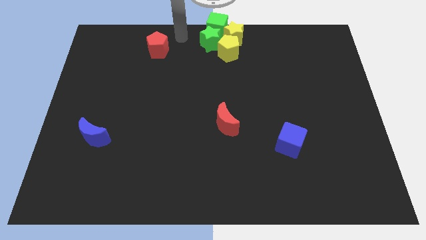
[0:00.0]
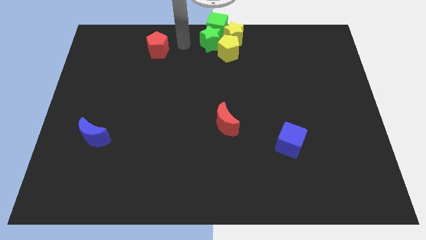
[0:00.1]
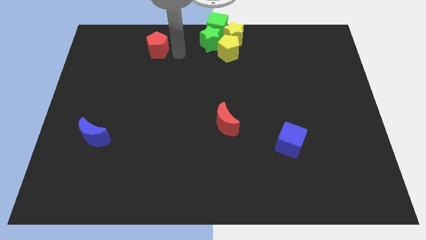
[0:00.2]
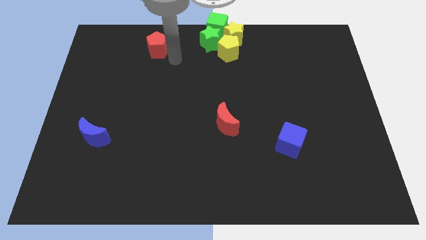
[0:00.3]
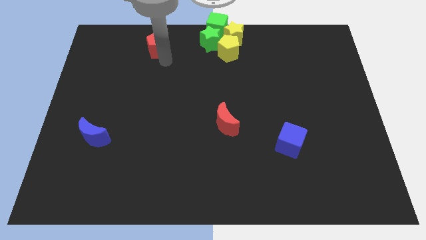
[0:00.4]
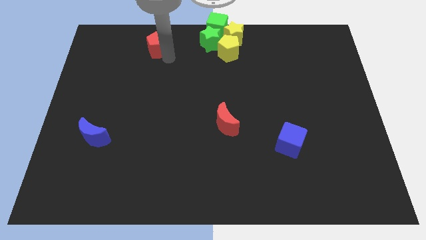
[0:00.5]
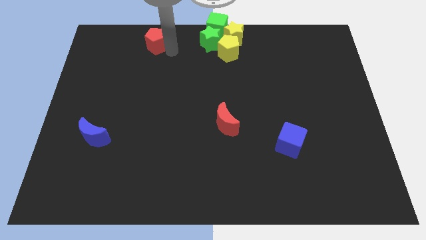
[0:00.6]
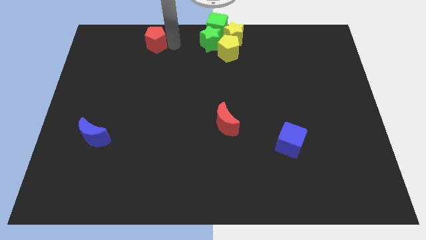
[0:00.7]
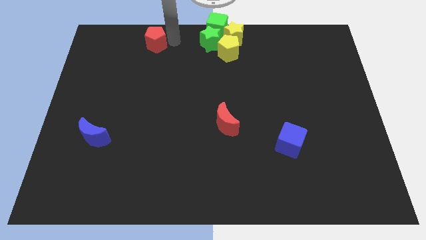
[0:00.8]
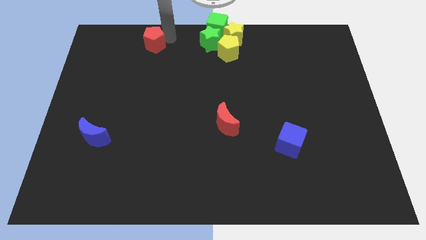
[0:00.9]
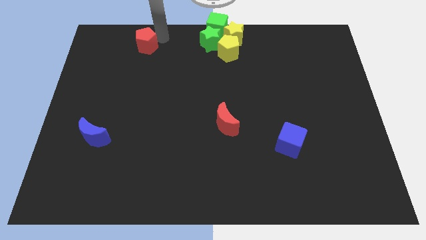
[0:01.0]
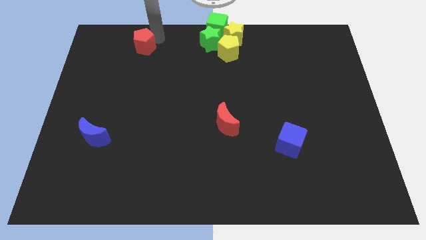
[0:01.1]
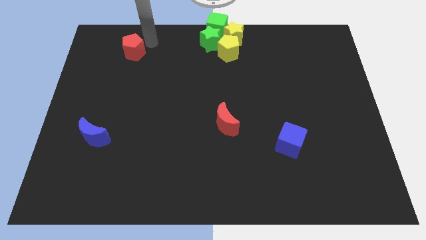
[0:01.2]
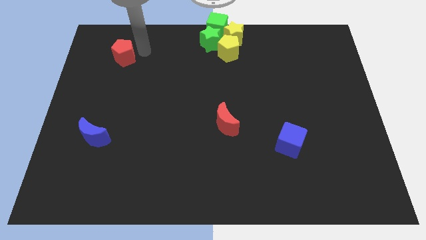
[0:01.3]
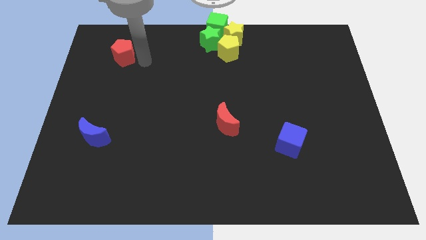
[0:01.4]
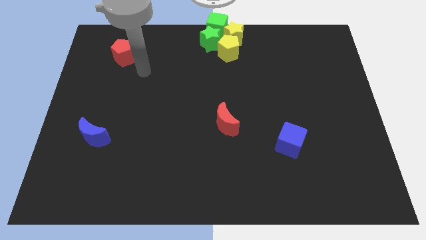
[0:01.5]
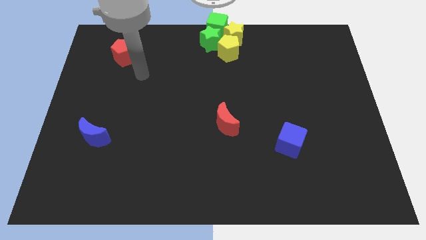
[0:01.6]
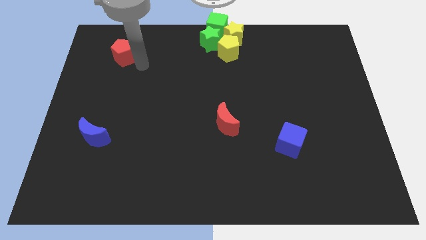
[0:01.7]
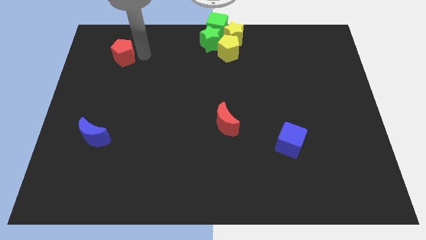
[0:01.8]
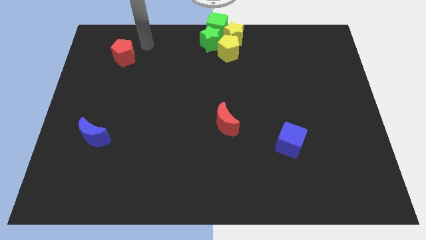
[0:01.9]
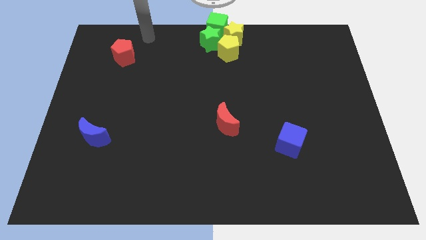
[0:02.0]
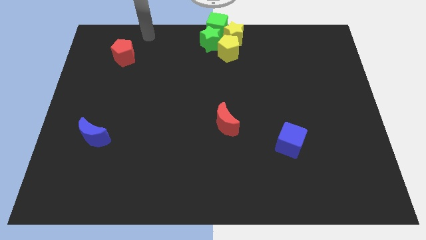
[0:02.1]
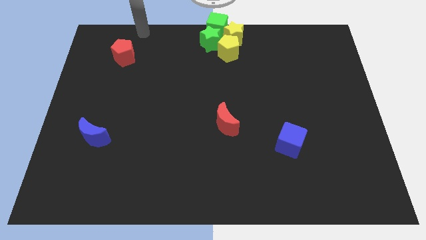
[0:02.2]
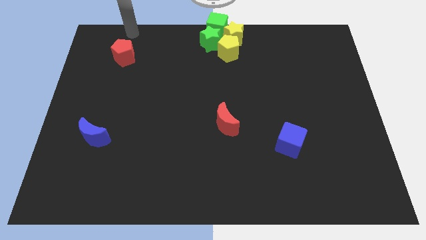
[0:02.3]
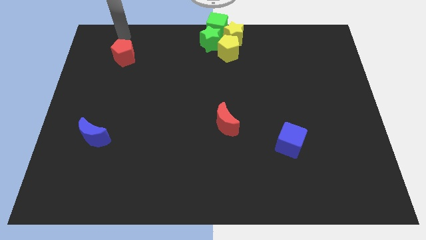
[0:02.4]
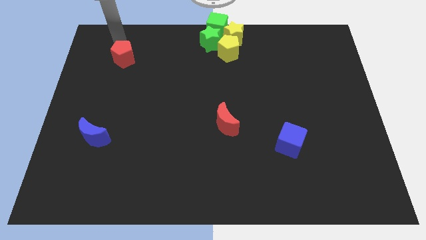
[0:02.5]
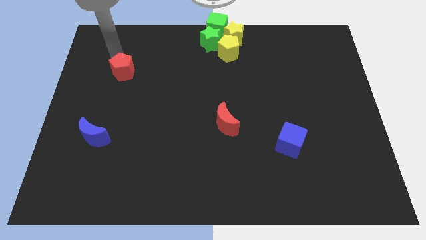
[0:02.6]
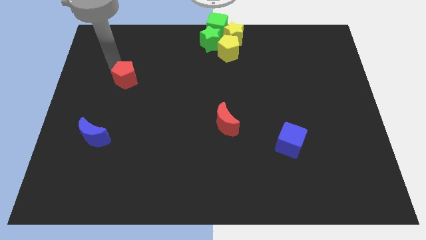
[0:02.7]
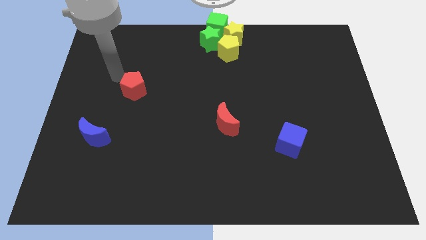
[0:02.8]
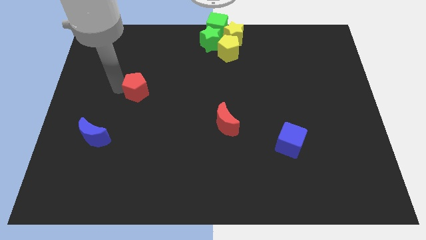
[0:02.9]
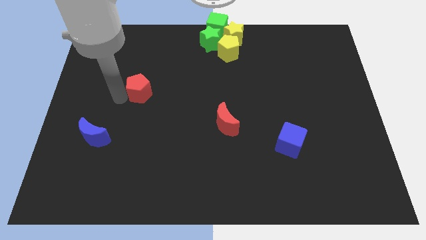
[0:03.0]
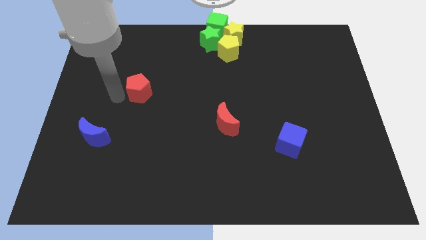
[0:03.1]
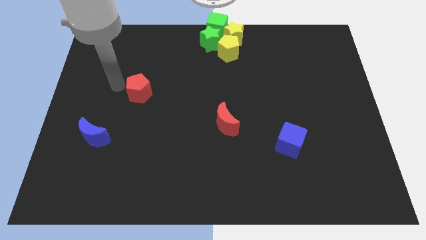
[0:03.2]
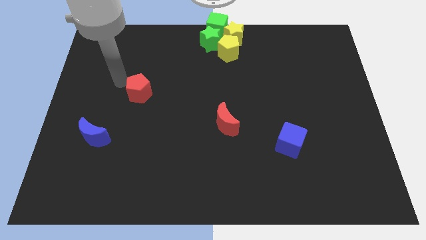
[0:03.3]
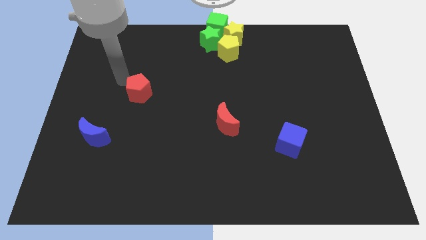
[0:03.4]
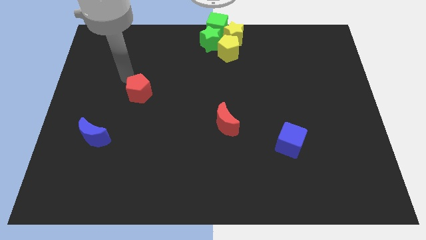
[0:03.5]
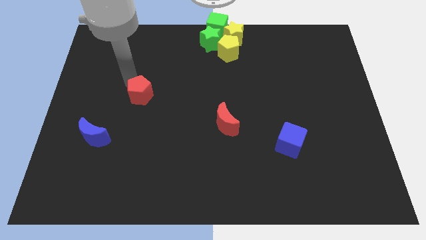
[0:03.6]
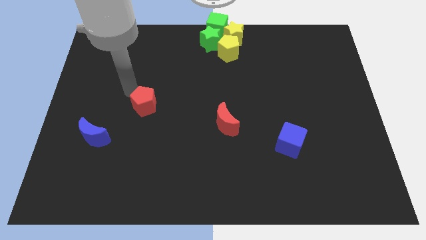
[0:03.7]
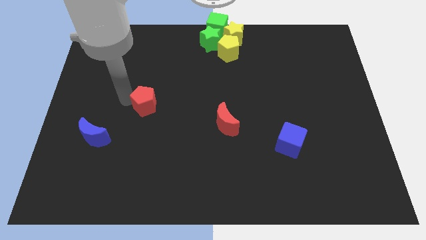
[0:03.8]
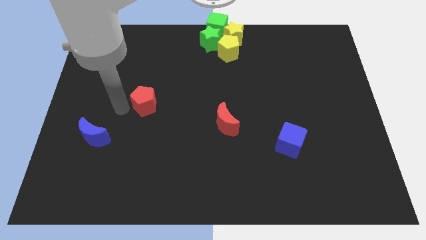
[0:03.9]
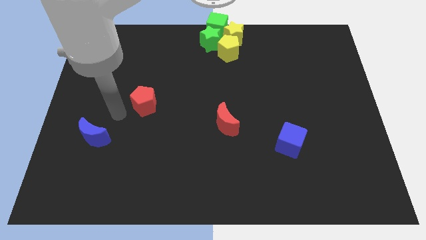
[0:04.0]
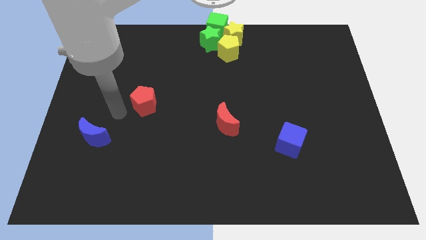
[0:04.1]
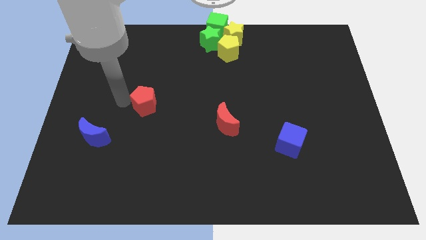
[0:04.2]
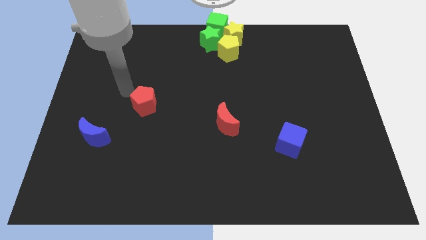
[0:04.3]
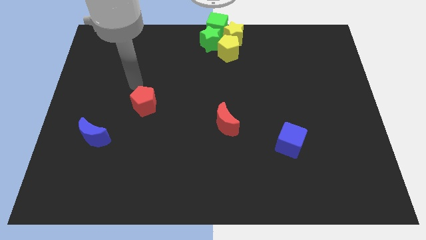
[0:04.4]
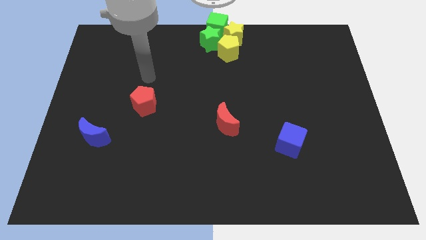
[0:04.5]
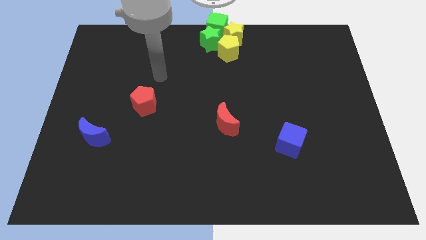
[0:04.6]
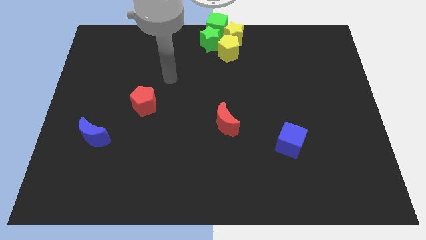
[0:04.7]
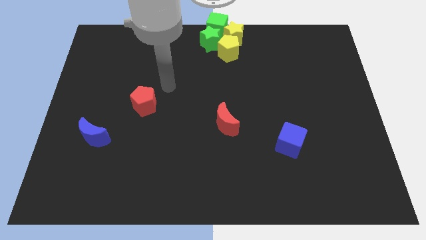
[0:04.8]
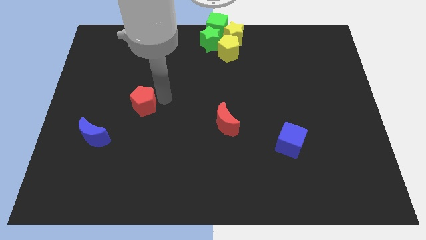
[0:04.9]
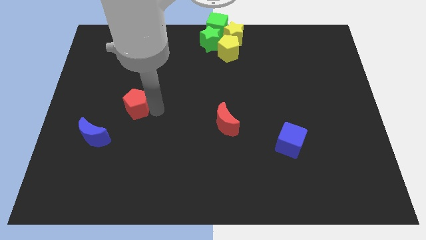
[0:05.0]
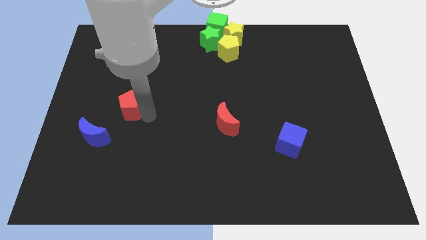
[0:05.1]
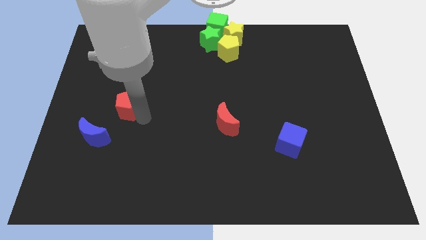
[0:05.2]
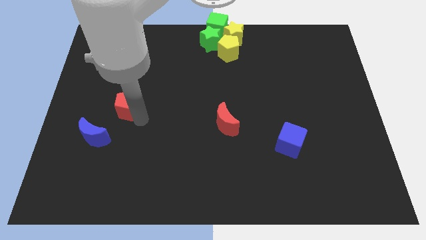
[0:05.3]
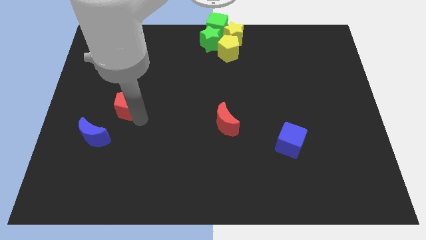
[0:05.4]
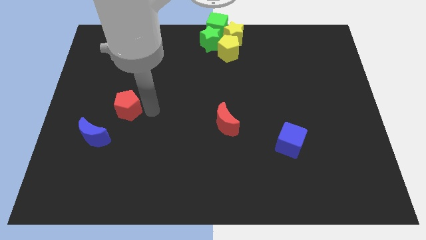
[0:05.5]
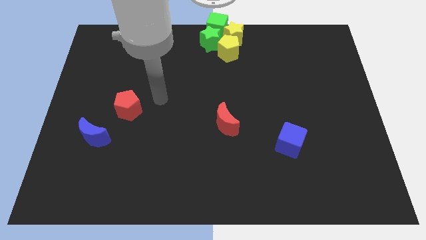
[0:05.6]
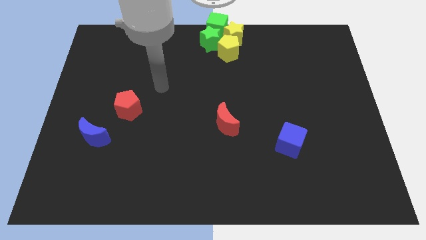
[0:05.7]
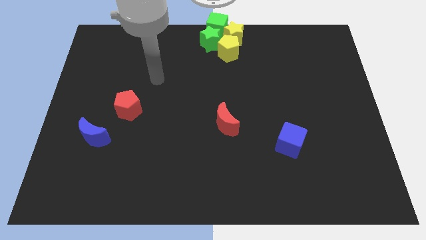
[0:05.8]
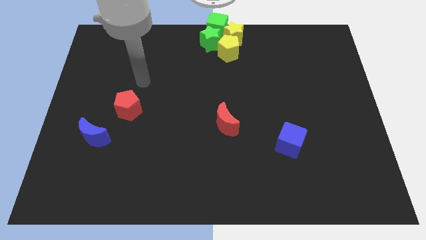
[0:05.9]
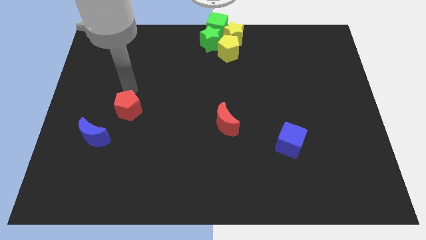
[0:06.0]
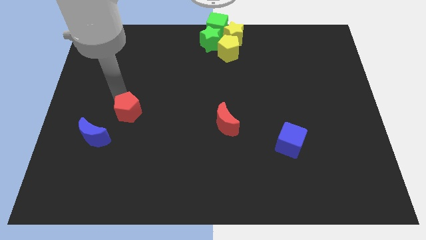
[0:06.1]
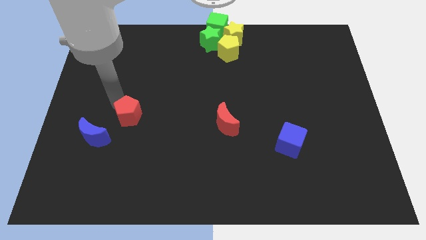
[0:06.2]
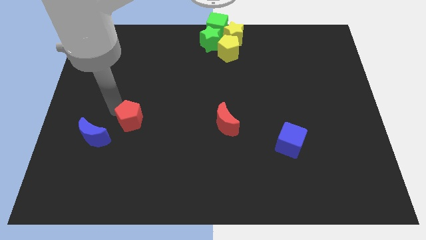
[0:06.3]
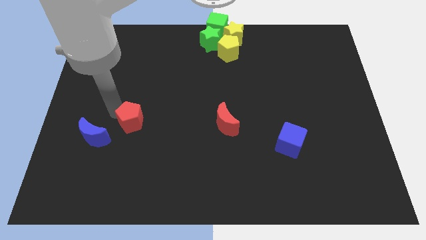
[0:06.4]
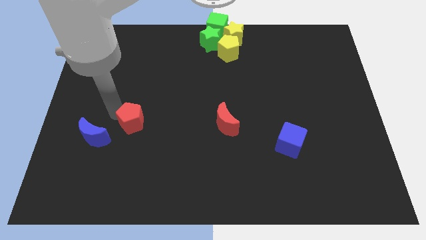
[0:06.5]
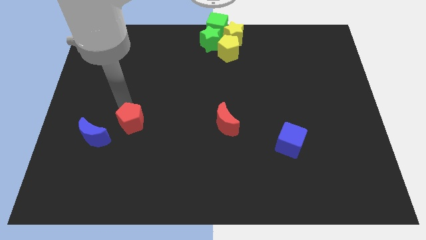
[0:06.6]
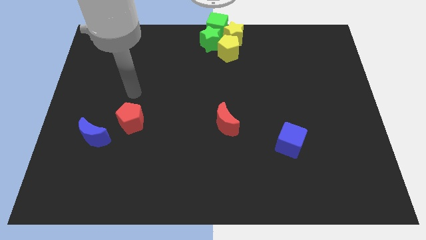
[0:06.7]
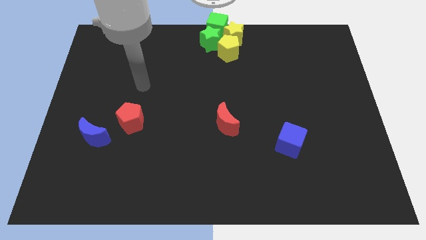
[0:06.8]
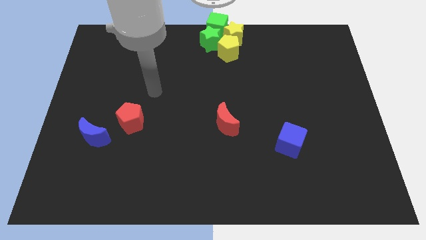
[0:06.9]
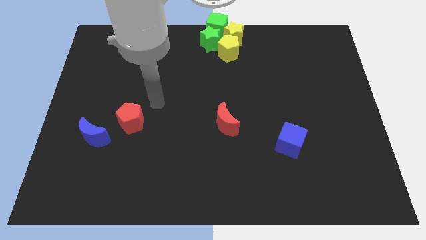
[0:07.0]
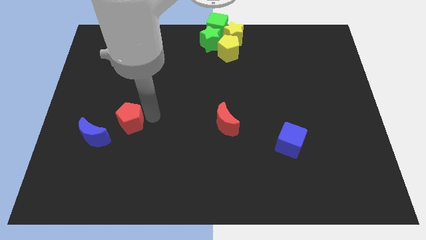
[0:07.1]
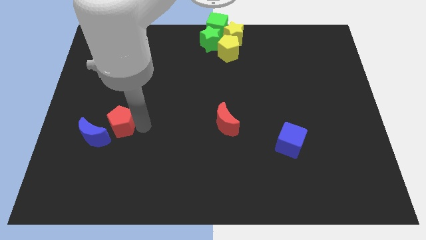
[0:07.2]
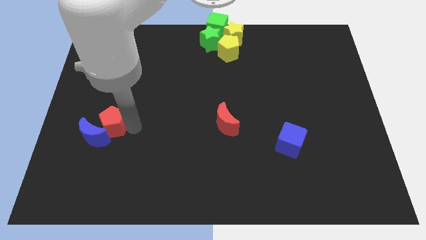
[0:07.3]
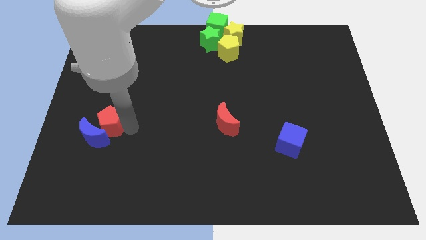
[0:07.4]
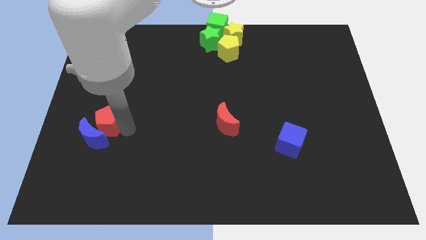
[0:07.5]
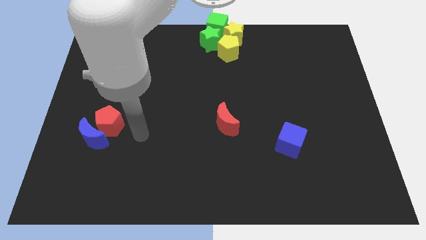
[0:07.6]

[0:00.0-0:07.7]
push the red pentagon into the blue crescent from top side

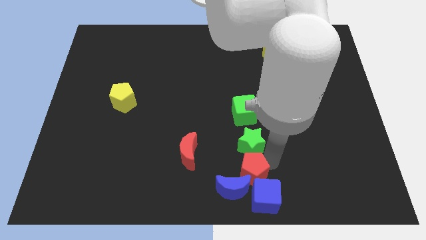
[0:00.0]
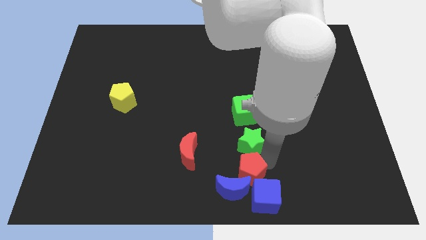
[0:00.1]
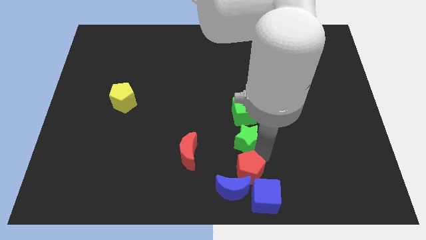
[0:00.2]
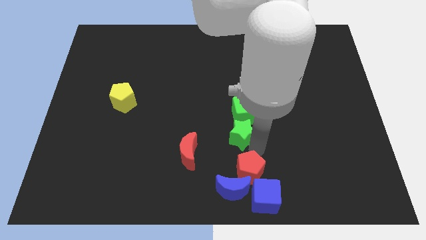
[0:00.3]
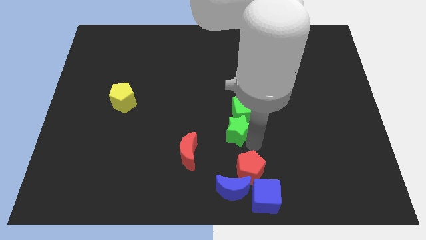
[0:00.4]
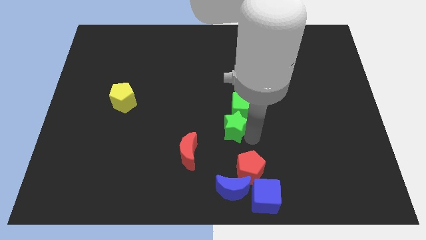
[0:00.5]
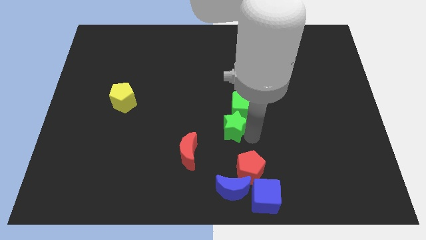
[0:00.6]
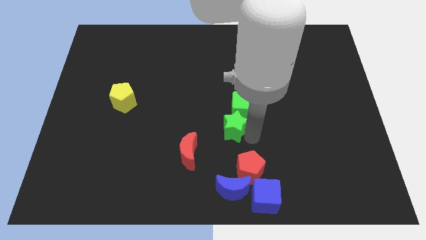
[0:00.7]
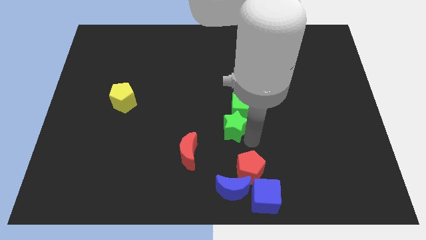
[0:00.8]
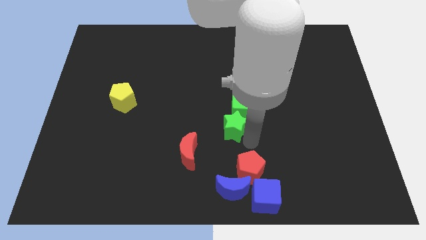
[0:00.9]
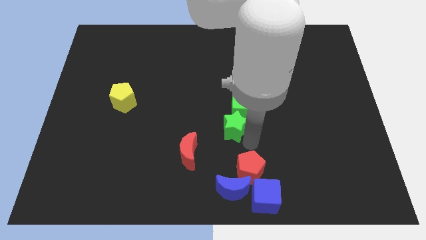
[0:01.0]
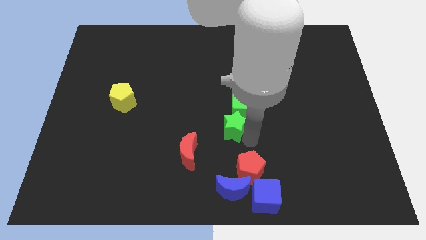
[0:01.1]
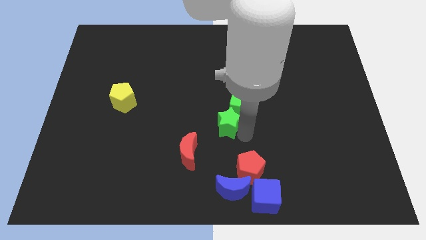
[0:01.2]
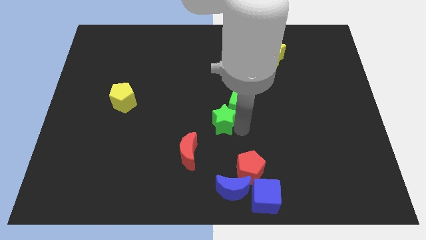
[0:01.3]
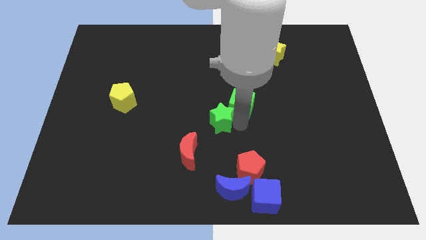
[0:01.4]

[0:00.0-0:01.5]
push green star into green cube
